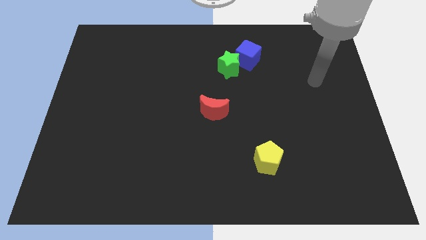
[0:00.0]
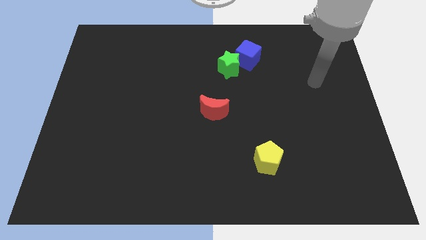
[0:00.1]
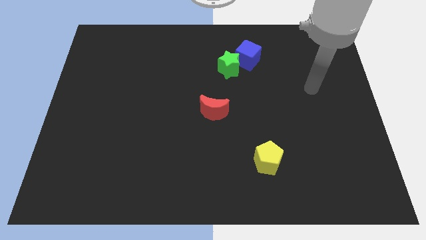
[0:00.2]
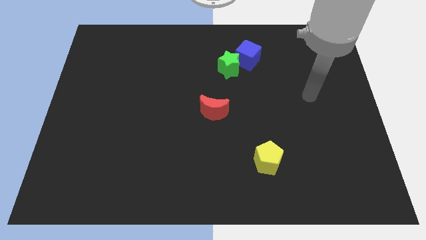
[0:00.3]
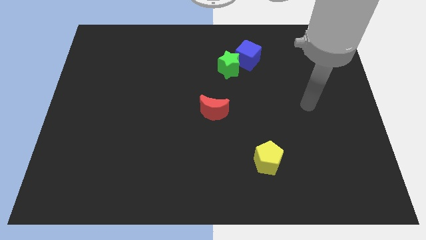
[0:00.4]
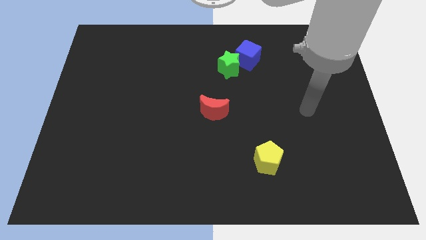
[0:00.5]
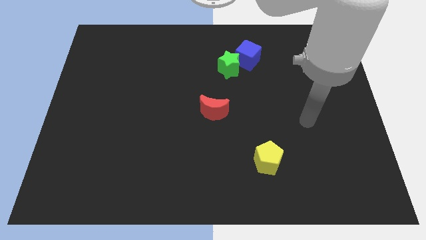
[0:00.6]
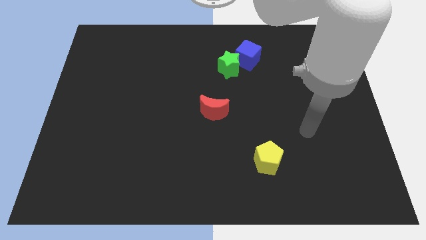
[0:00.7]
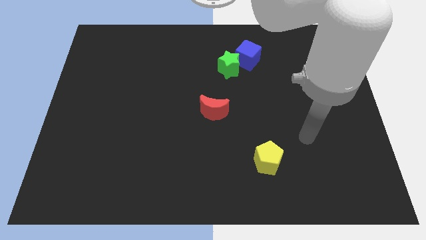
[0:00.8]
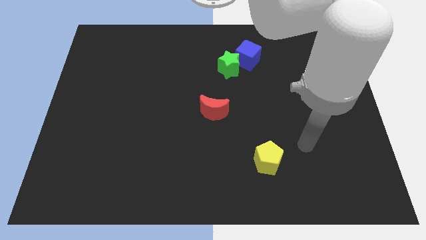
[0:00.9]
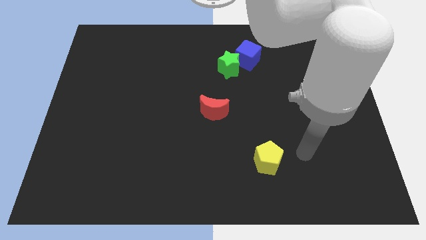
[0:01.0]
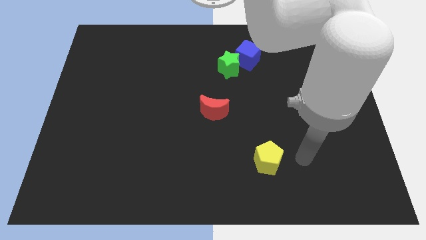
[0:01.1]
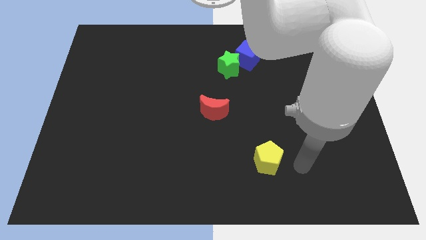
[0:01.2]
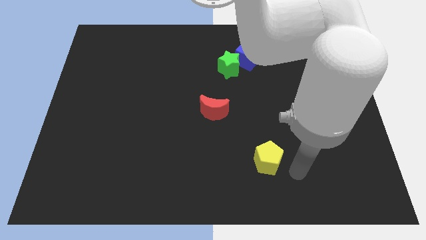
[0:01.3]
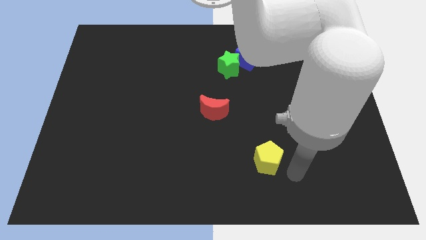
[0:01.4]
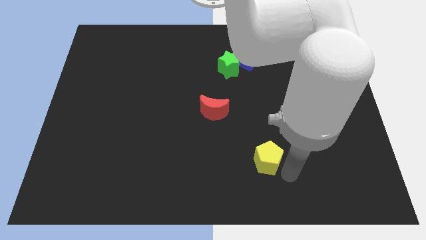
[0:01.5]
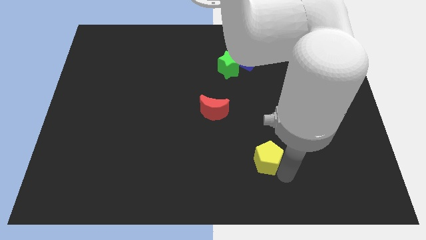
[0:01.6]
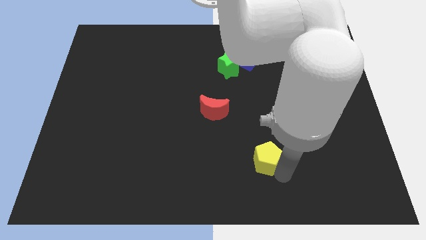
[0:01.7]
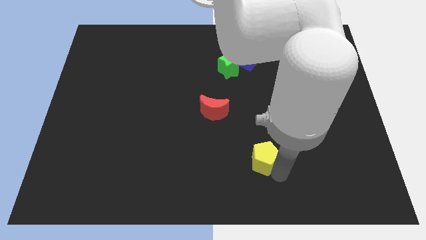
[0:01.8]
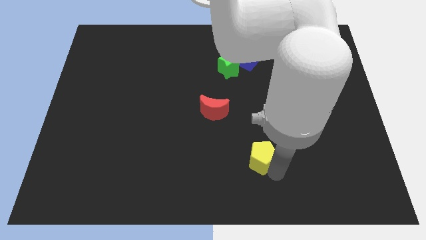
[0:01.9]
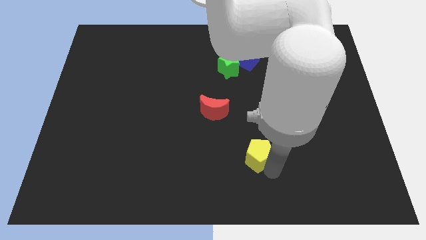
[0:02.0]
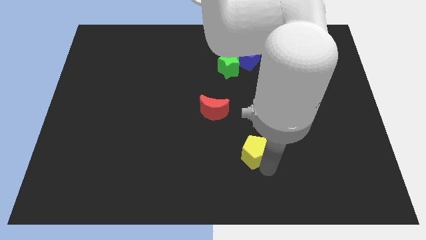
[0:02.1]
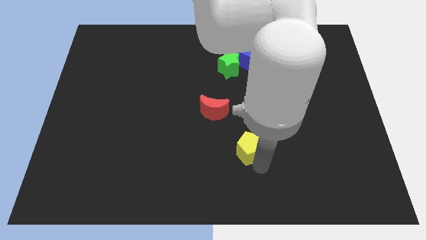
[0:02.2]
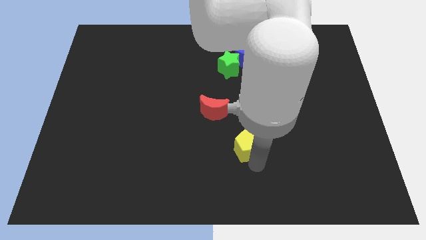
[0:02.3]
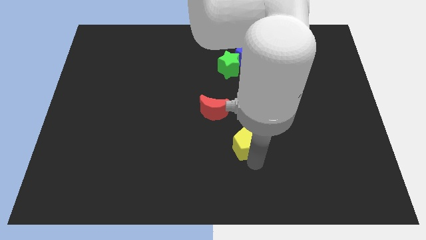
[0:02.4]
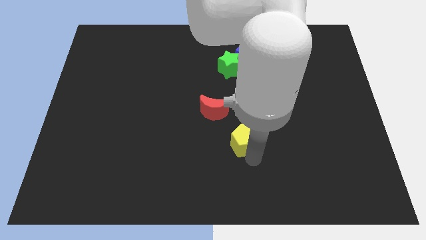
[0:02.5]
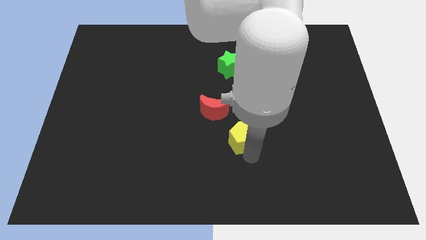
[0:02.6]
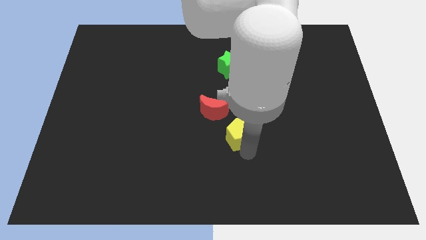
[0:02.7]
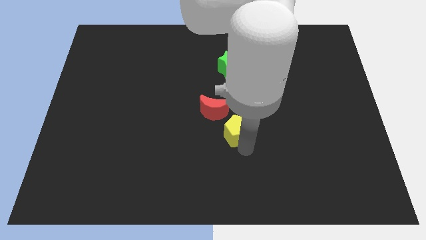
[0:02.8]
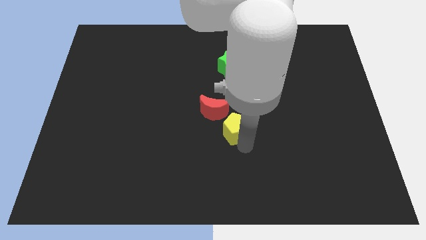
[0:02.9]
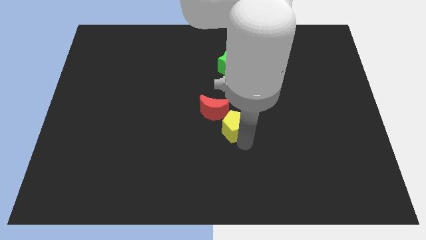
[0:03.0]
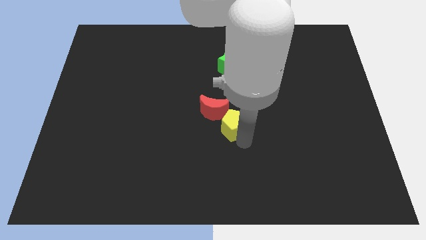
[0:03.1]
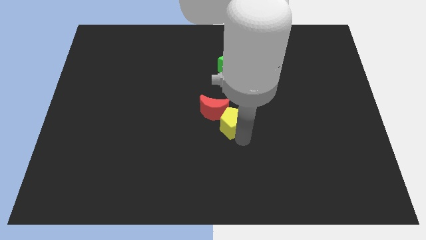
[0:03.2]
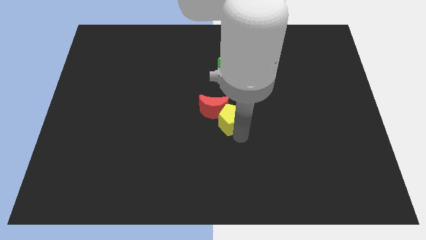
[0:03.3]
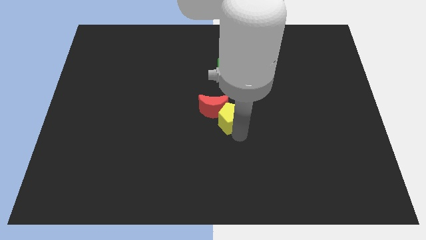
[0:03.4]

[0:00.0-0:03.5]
slide the yellow pentagon to the red block

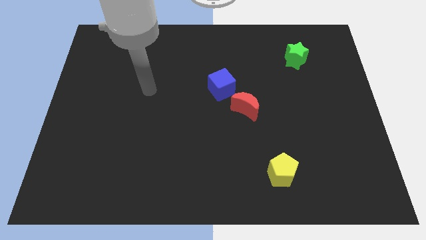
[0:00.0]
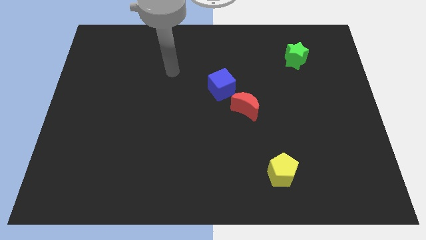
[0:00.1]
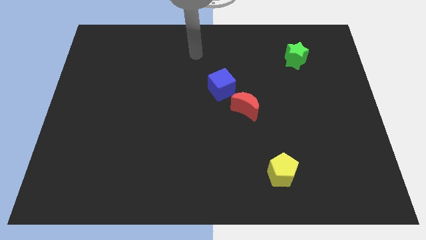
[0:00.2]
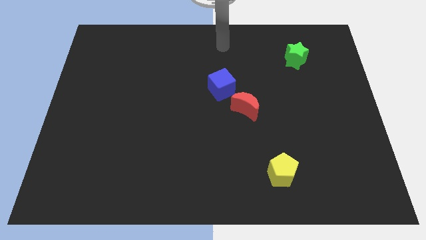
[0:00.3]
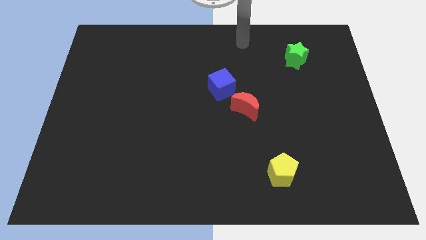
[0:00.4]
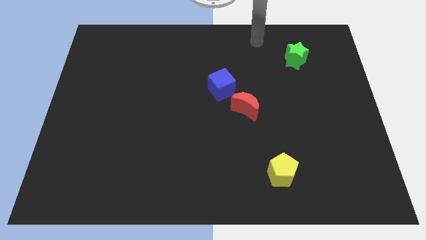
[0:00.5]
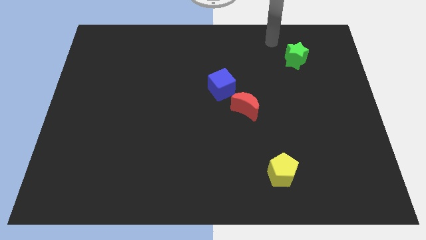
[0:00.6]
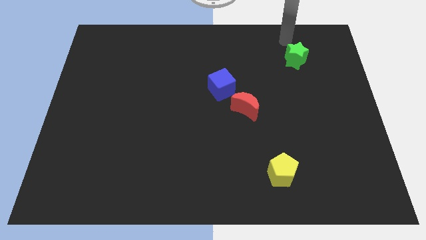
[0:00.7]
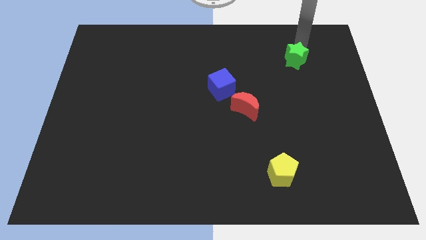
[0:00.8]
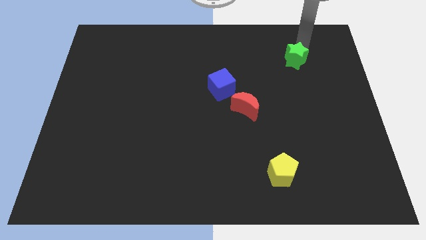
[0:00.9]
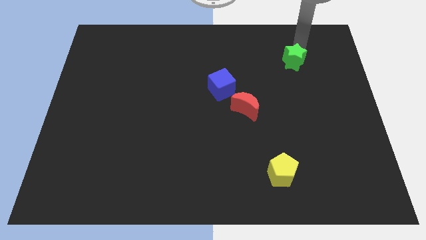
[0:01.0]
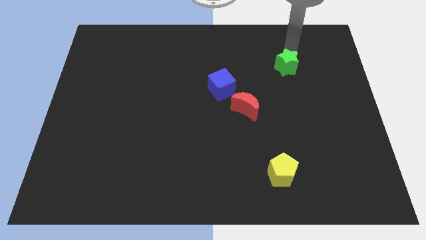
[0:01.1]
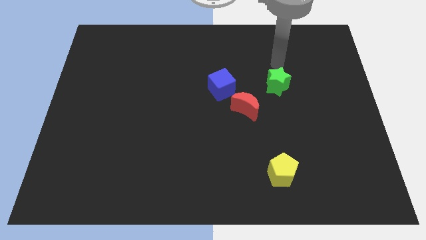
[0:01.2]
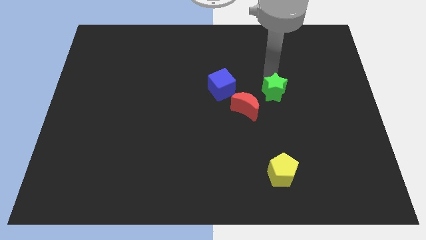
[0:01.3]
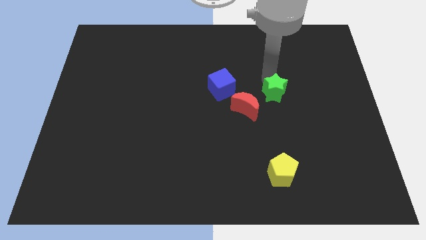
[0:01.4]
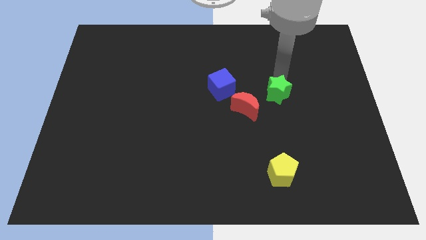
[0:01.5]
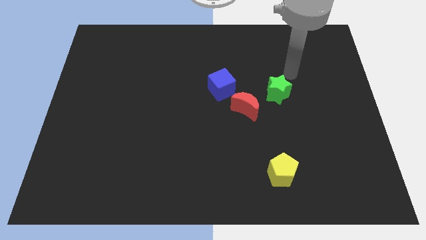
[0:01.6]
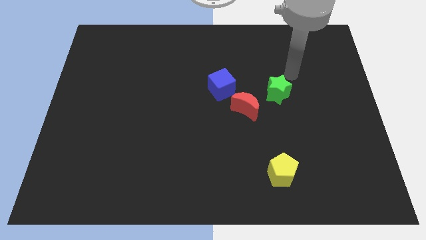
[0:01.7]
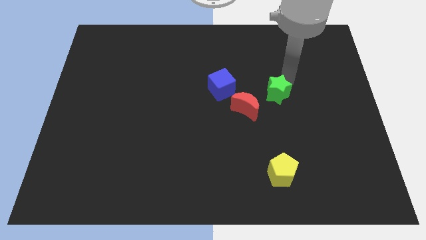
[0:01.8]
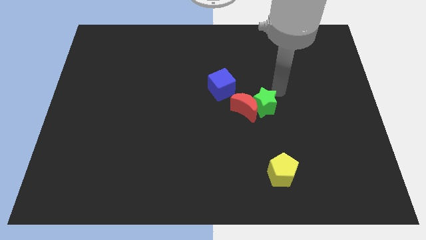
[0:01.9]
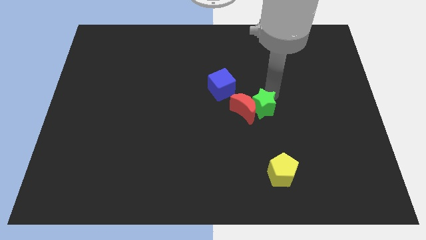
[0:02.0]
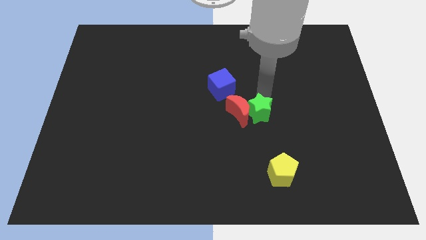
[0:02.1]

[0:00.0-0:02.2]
push the star next to the moon

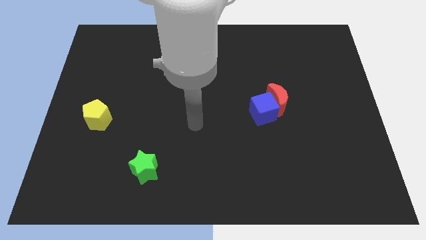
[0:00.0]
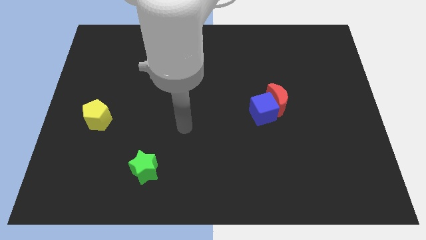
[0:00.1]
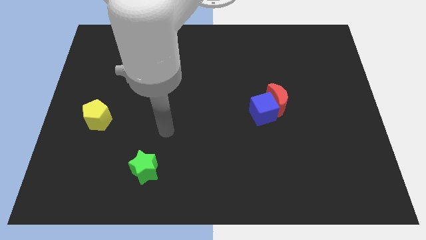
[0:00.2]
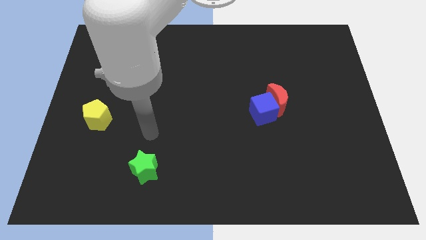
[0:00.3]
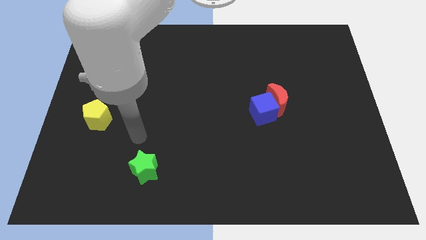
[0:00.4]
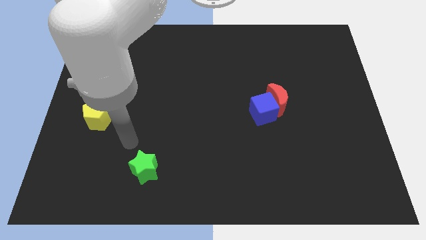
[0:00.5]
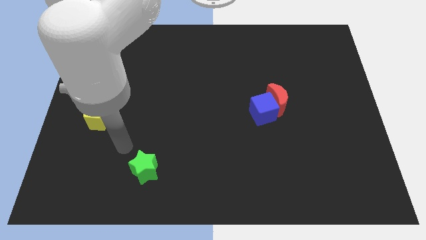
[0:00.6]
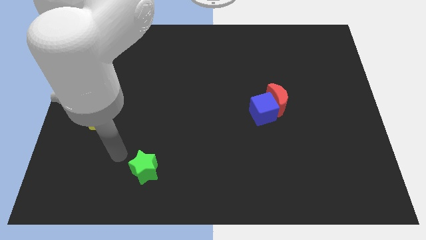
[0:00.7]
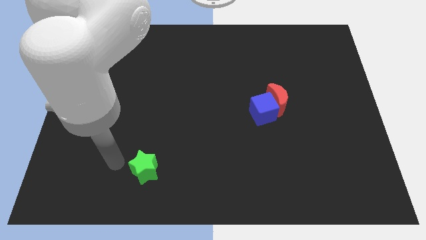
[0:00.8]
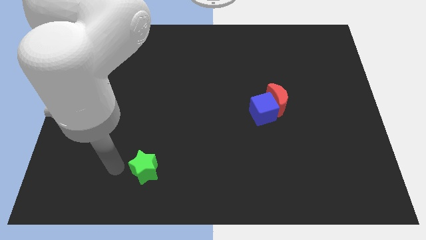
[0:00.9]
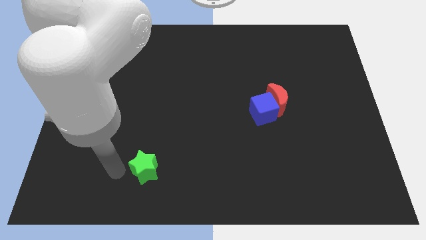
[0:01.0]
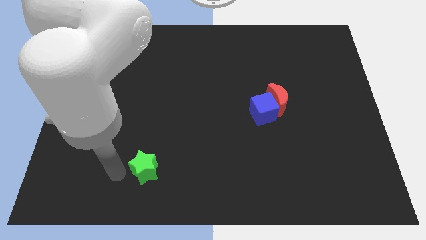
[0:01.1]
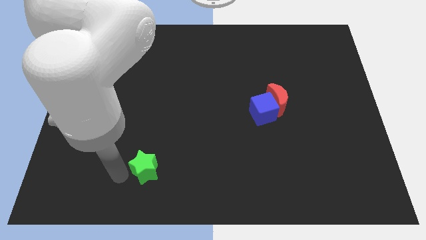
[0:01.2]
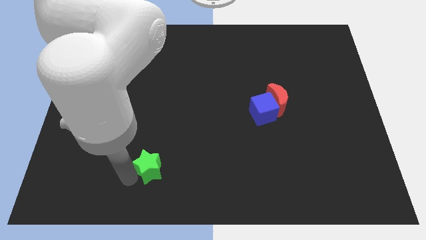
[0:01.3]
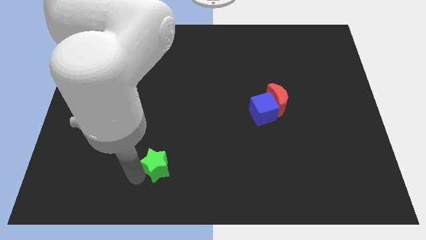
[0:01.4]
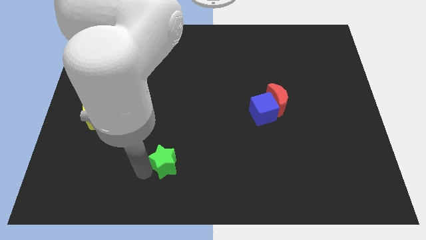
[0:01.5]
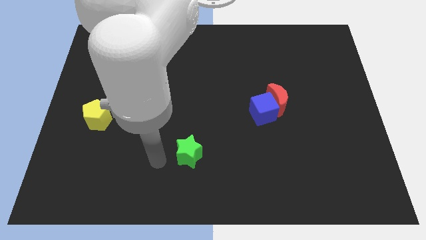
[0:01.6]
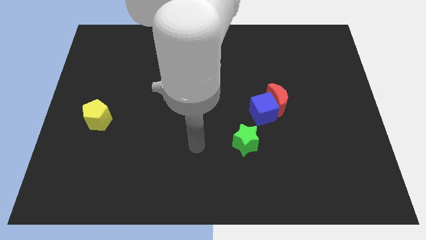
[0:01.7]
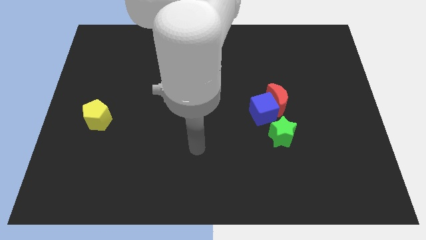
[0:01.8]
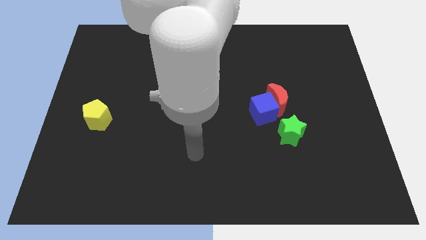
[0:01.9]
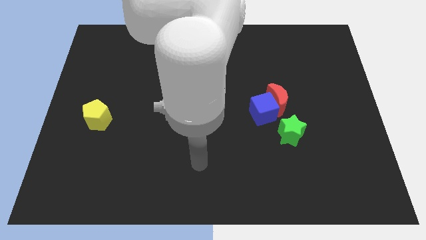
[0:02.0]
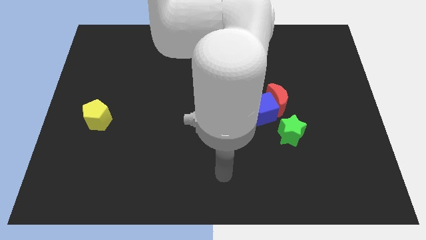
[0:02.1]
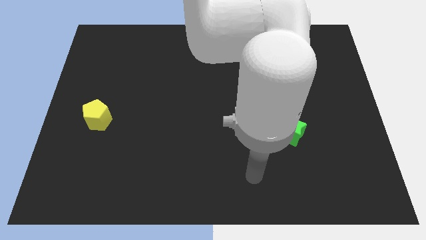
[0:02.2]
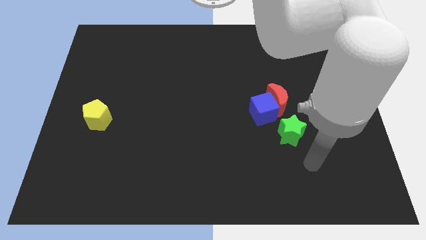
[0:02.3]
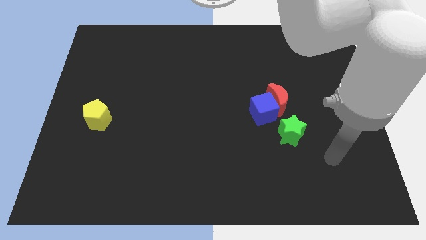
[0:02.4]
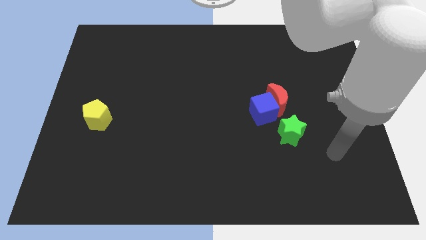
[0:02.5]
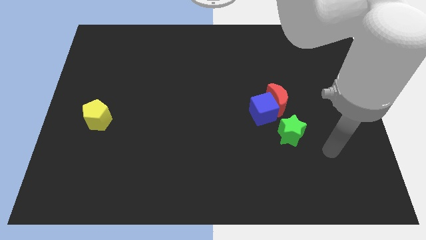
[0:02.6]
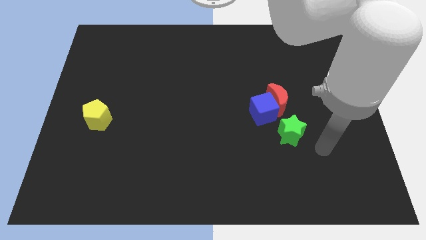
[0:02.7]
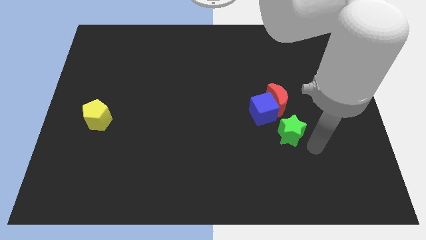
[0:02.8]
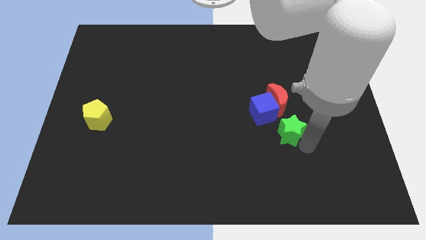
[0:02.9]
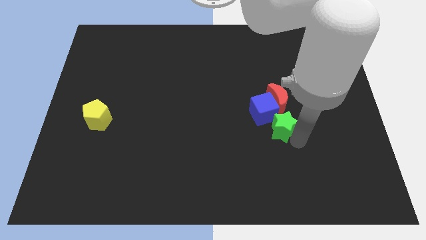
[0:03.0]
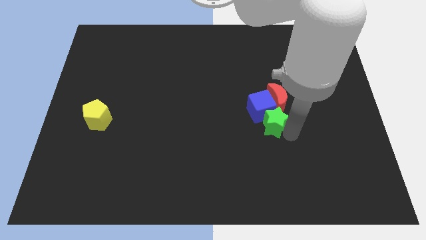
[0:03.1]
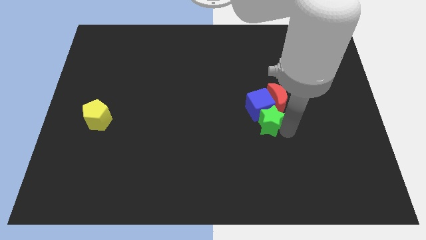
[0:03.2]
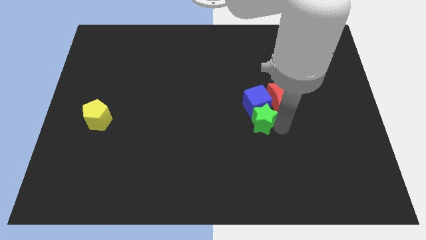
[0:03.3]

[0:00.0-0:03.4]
put the green star to the blue block
